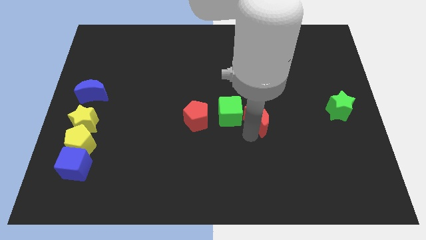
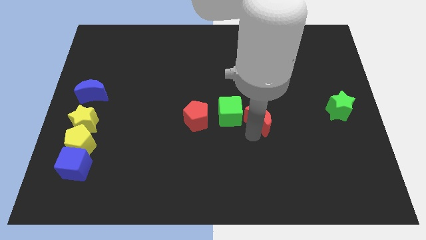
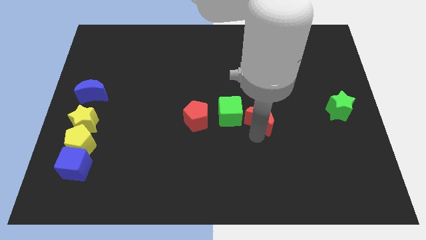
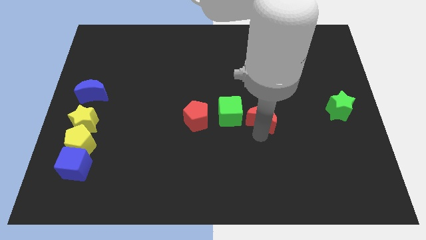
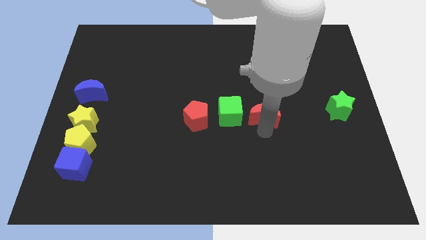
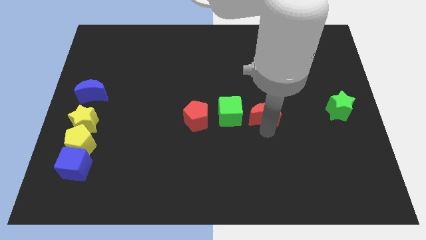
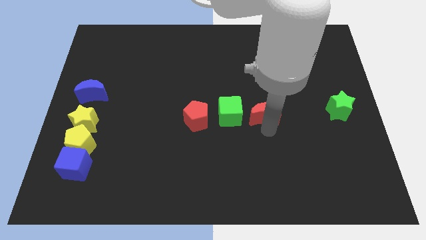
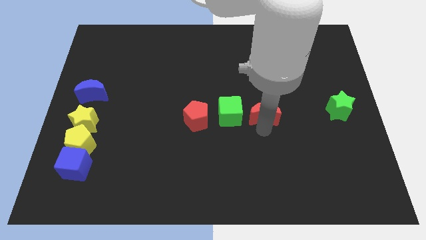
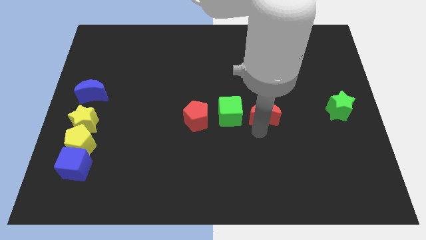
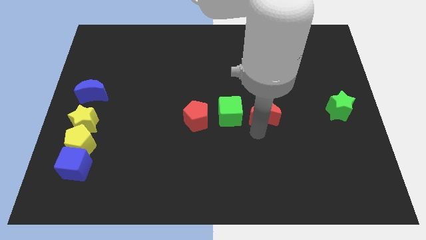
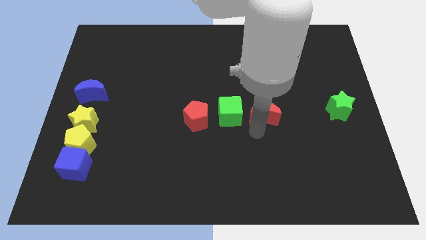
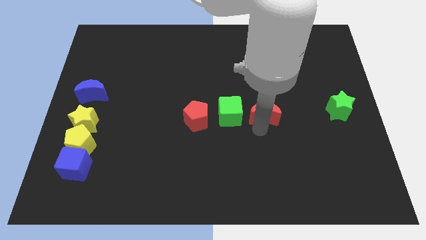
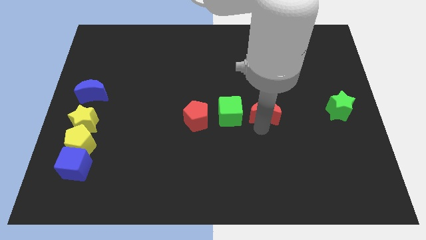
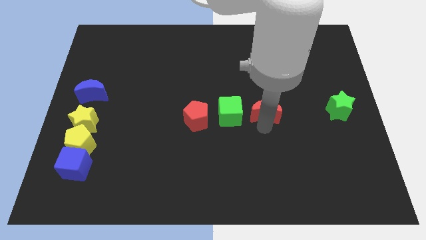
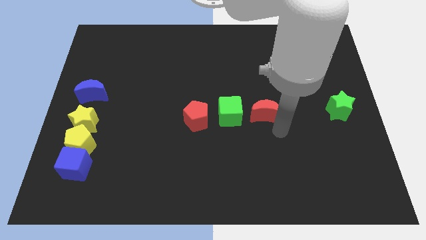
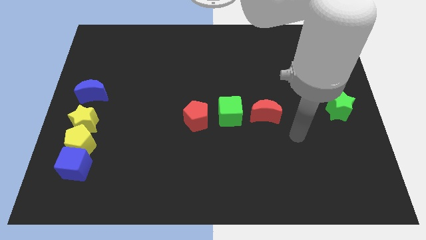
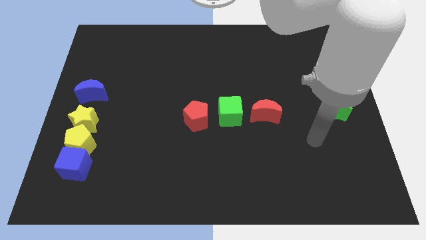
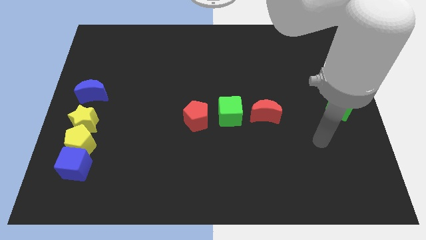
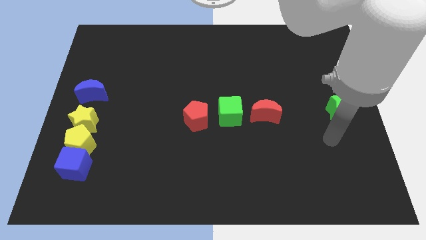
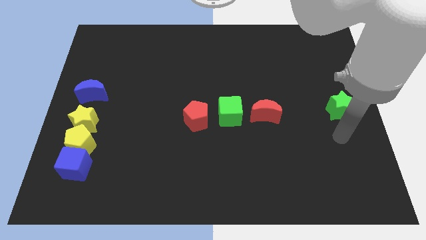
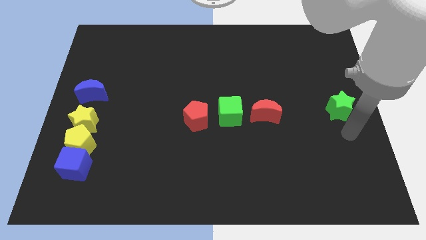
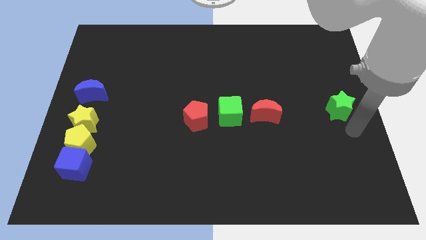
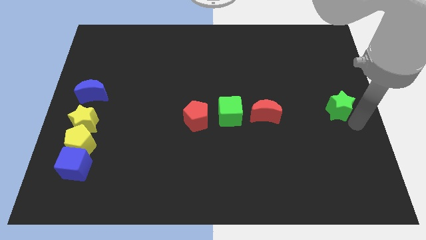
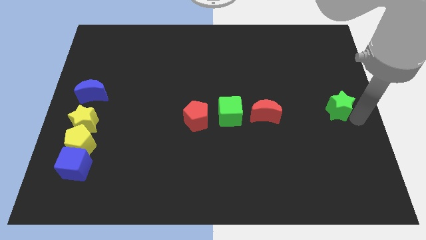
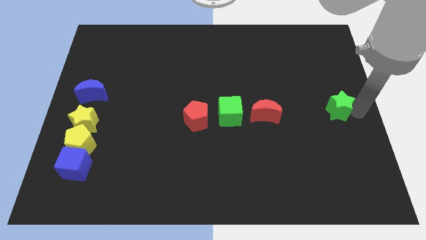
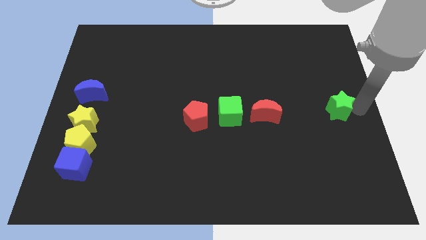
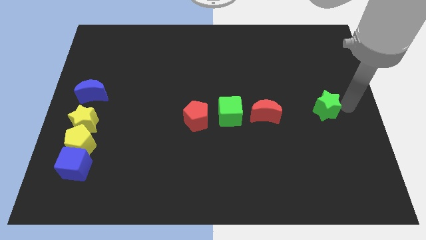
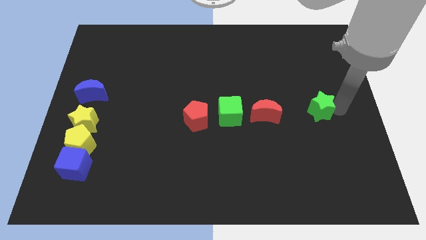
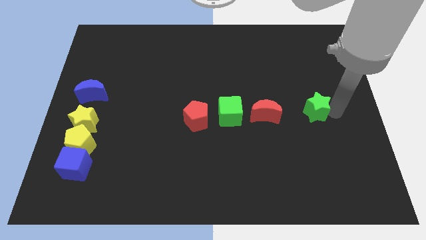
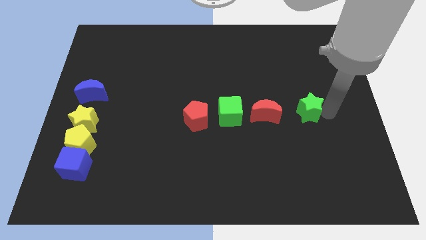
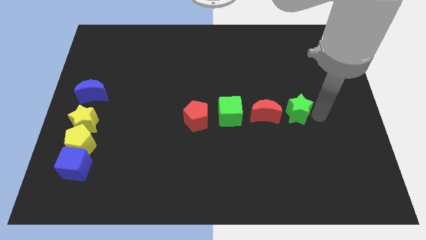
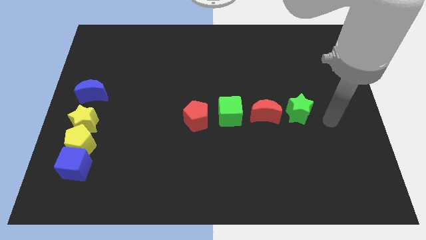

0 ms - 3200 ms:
push the green star close to the red crescent from the right

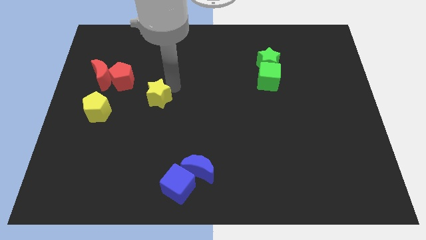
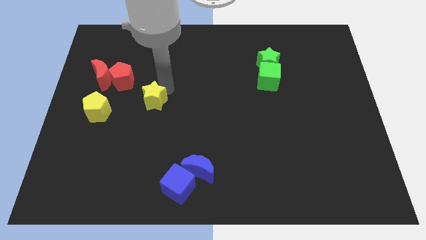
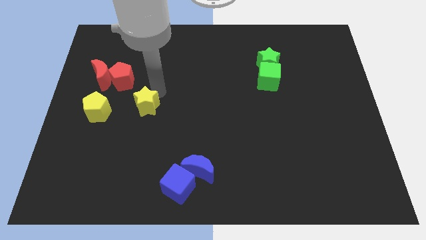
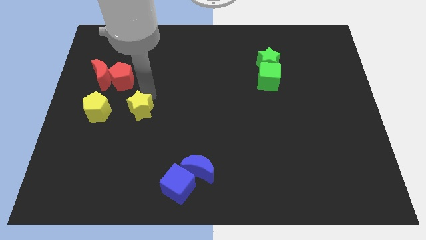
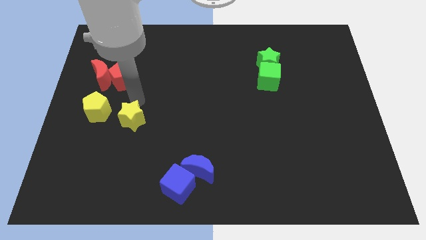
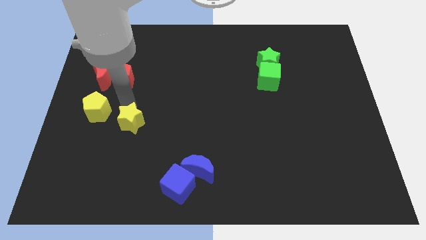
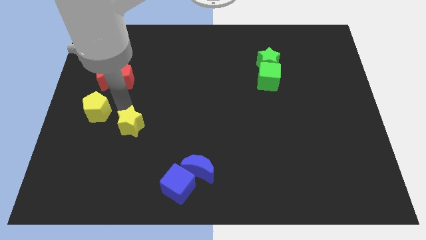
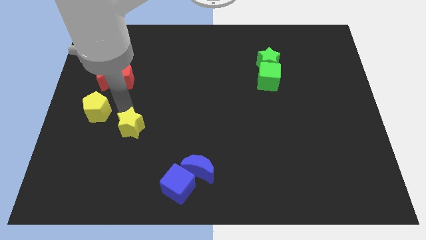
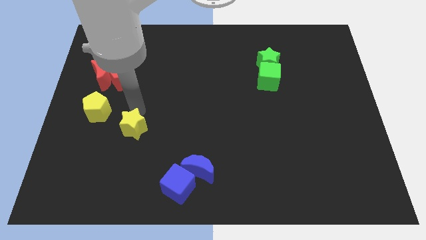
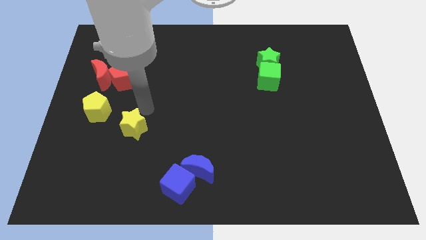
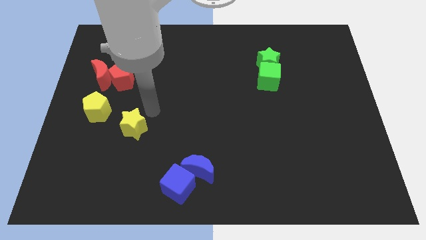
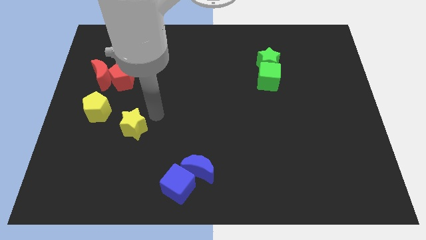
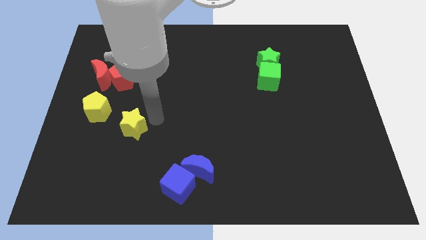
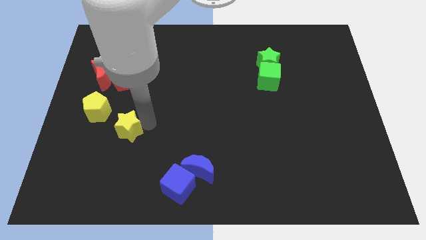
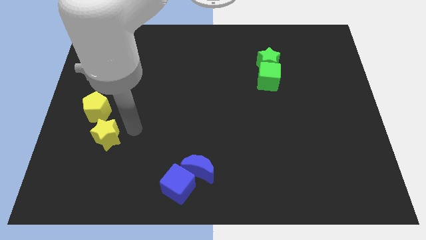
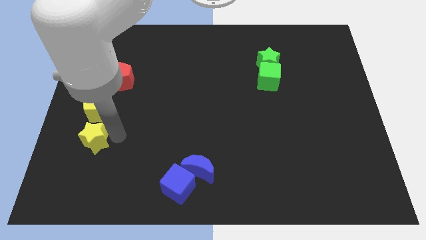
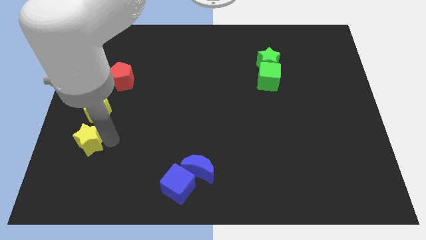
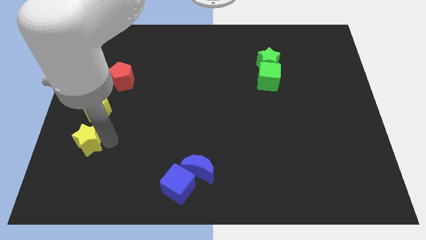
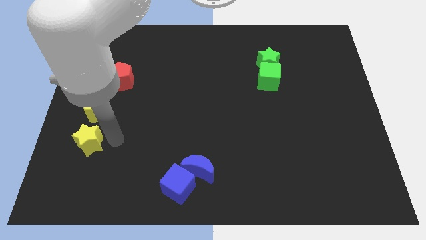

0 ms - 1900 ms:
drag the yellow star and place it below the yellow pentagon

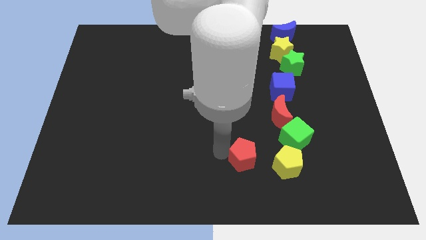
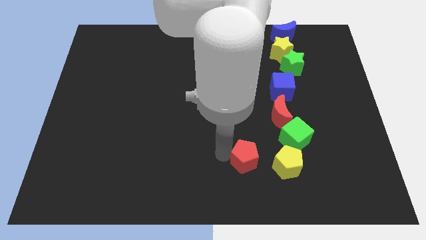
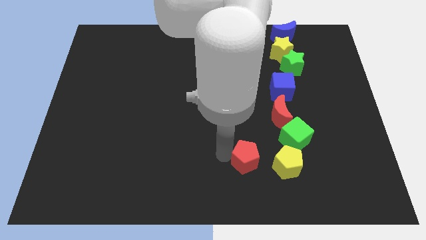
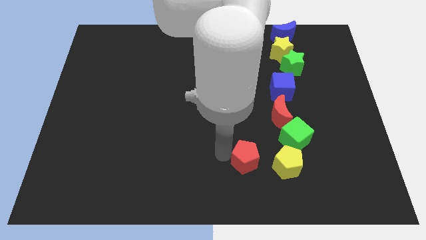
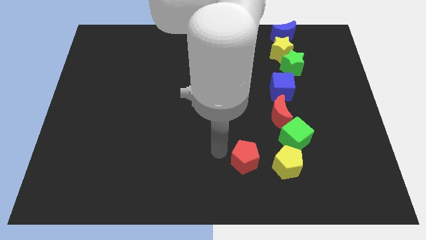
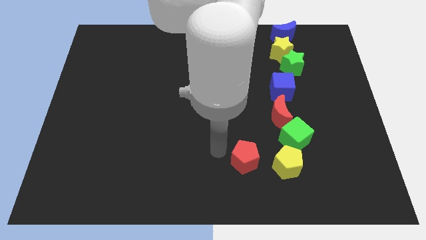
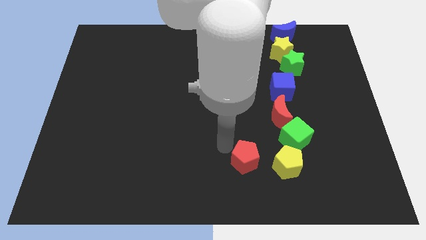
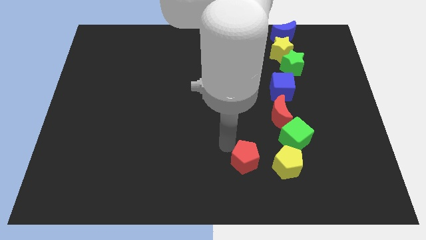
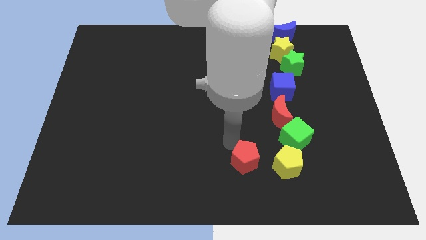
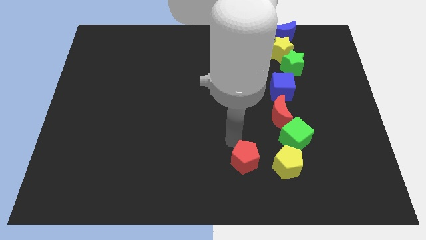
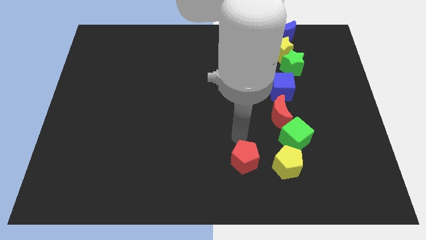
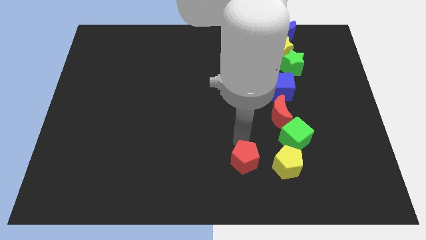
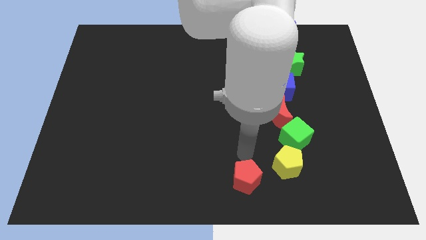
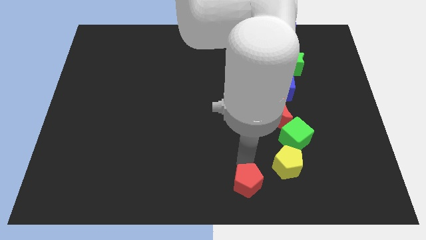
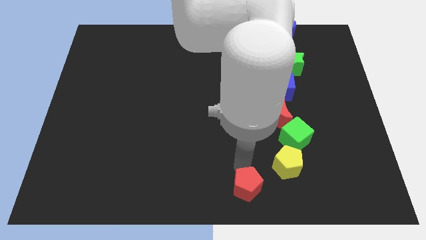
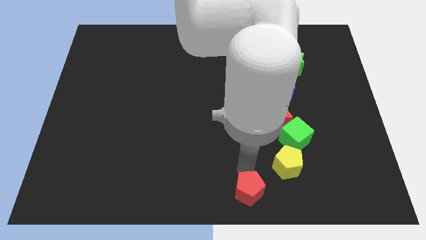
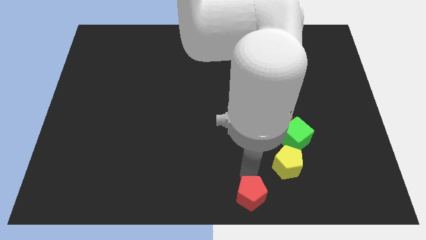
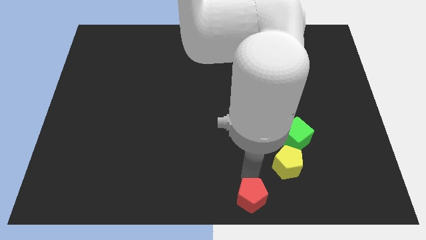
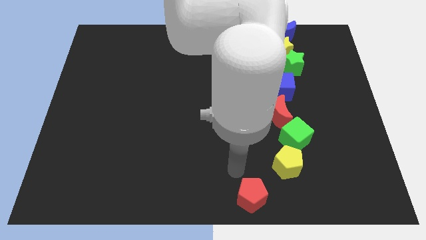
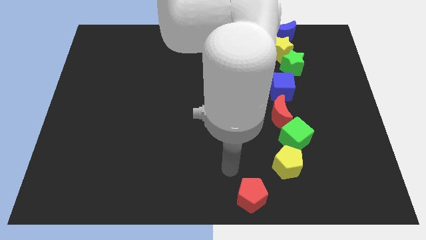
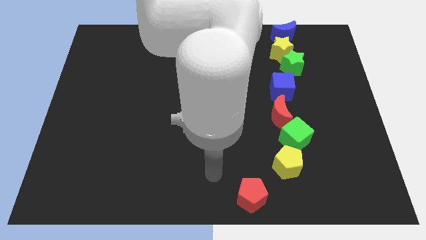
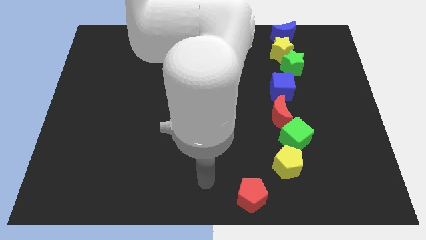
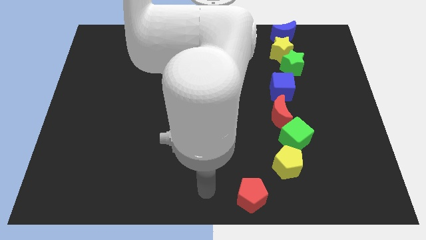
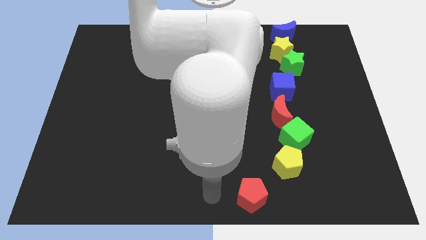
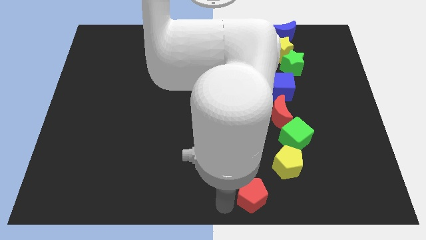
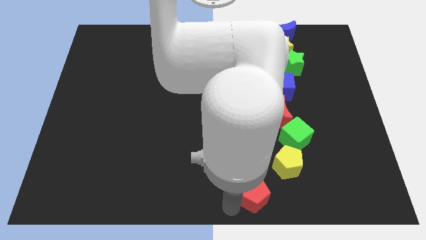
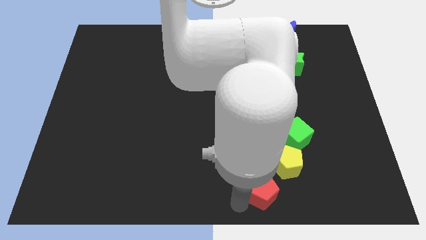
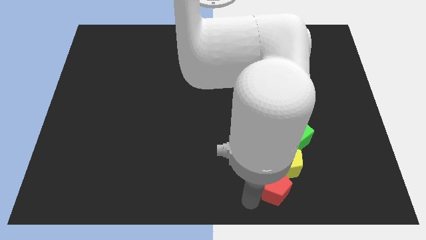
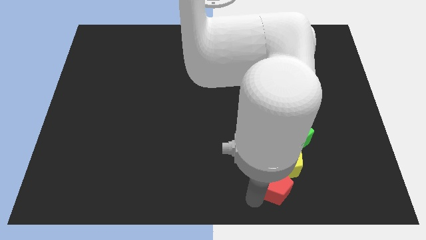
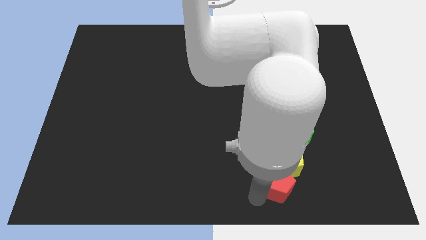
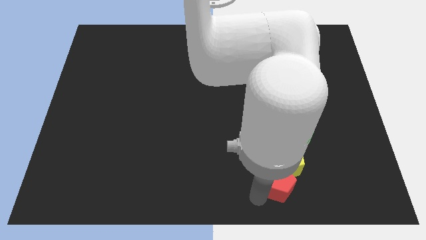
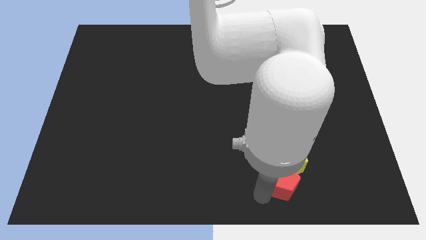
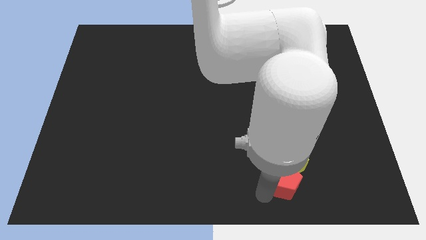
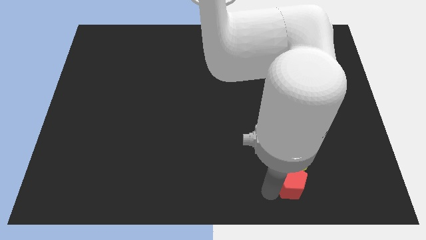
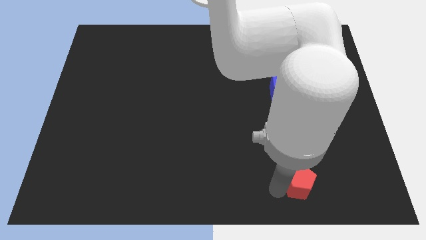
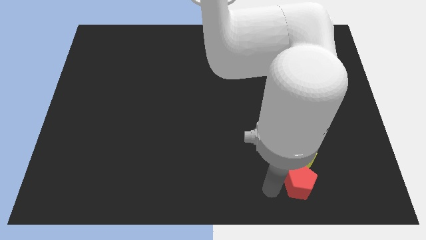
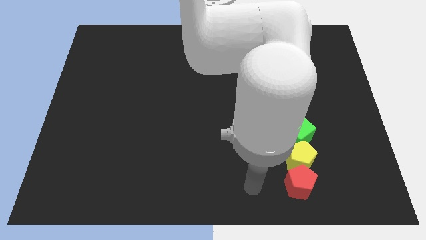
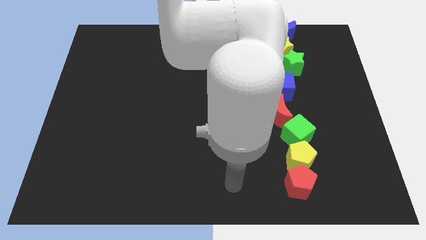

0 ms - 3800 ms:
move red pentagon below the yellow pentagon

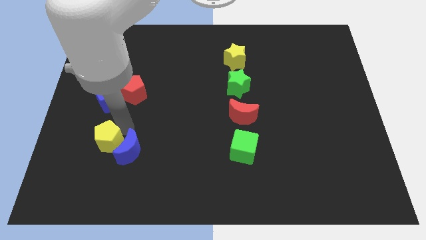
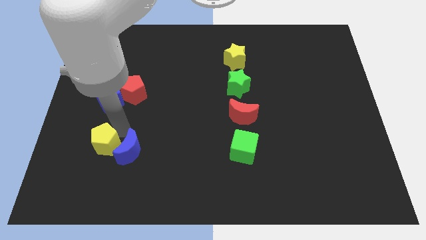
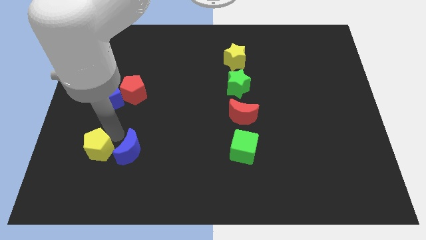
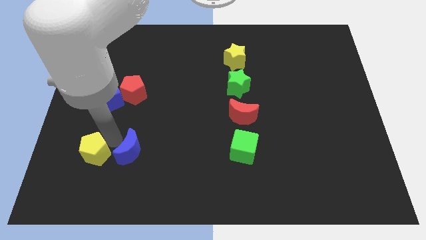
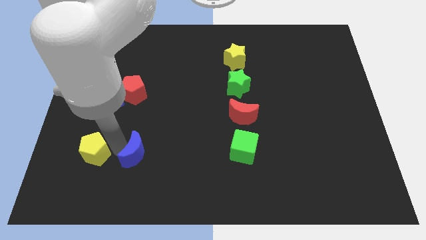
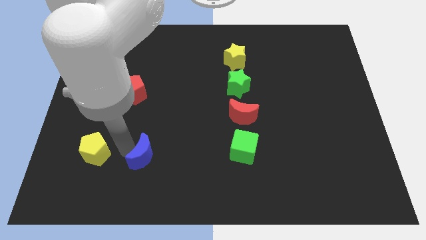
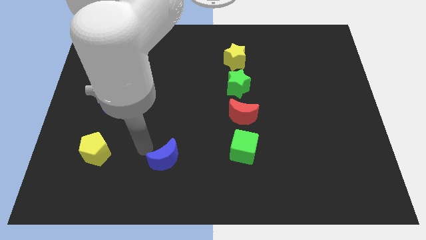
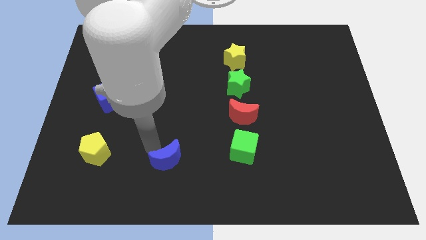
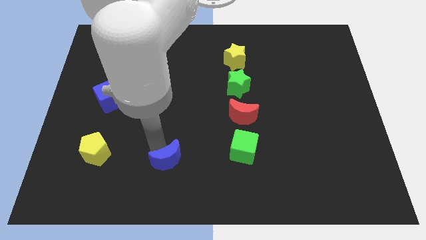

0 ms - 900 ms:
place the blue crescent in between the green cube and the yellow pentagon
